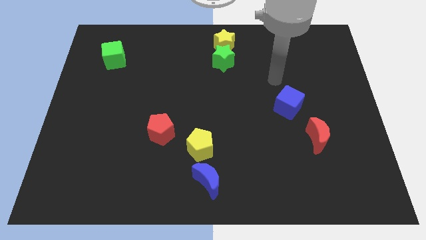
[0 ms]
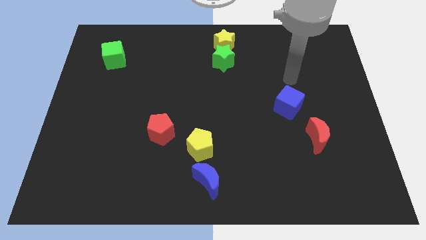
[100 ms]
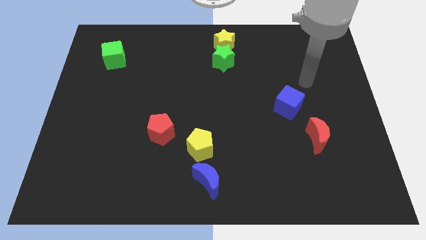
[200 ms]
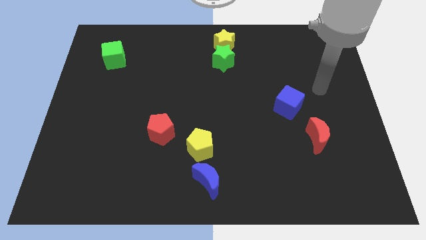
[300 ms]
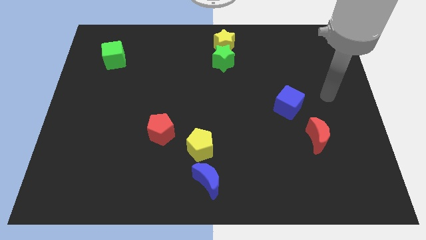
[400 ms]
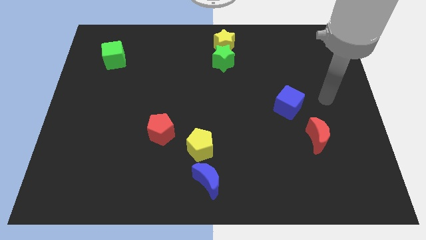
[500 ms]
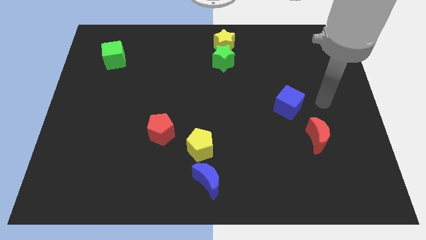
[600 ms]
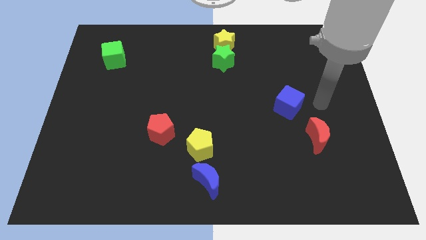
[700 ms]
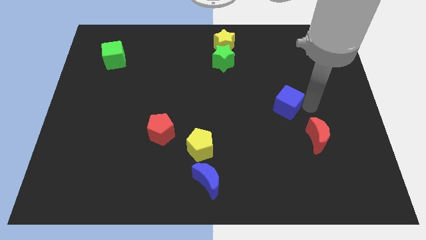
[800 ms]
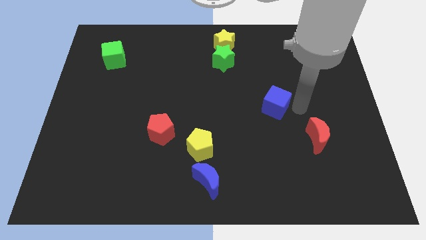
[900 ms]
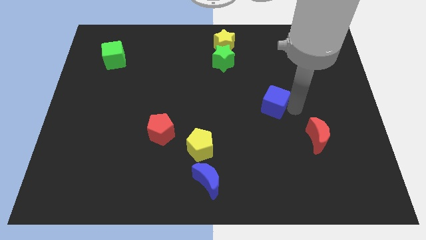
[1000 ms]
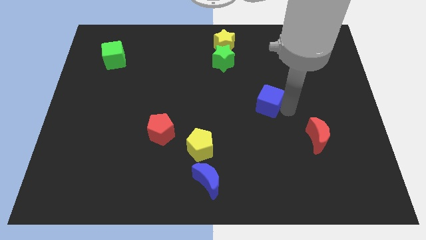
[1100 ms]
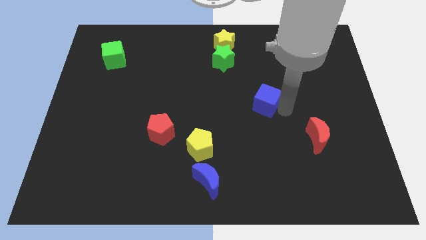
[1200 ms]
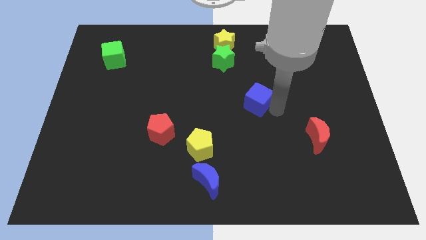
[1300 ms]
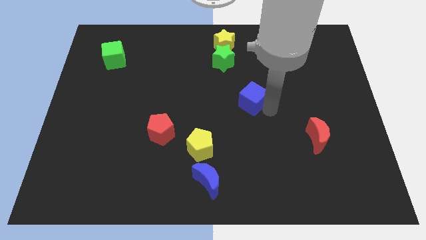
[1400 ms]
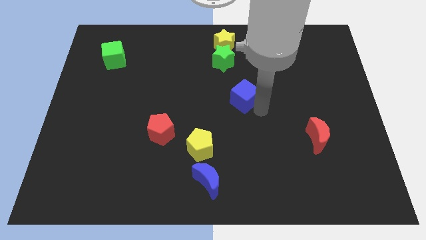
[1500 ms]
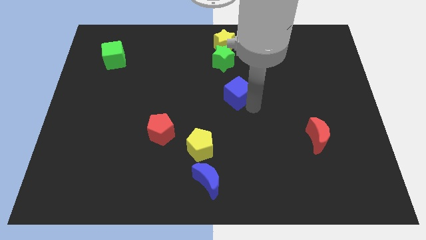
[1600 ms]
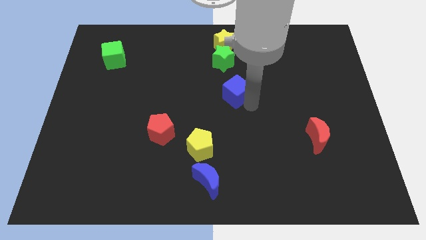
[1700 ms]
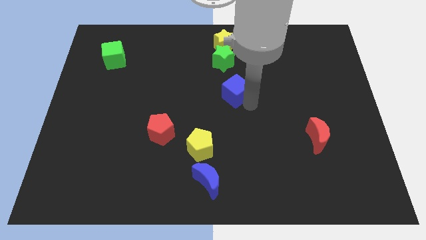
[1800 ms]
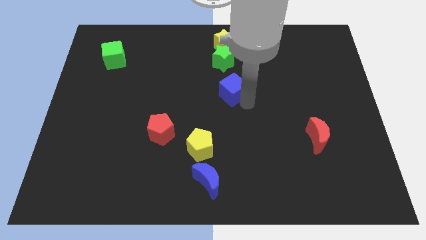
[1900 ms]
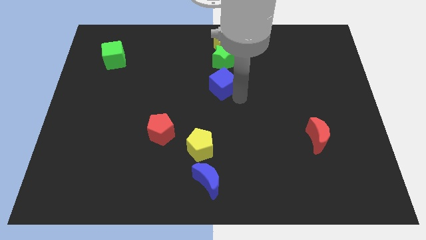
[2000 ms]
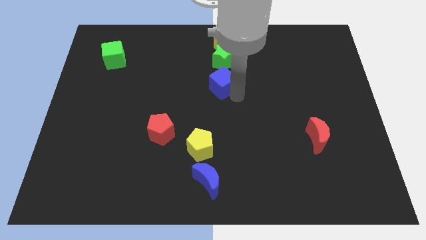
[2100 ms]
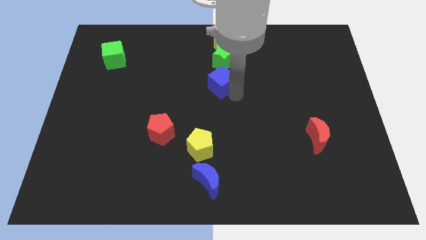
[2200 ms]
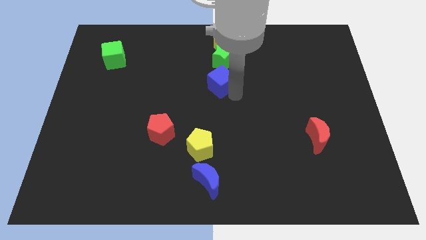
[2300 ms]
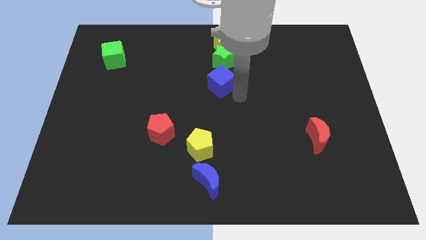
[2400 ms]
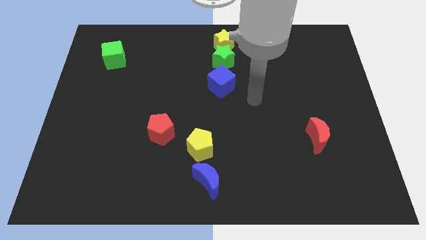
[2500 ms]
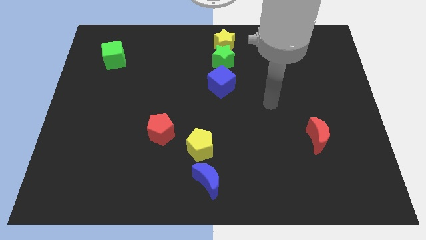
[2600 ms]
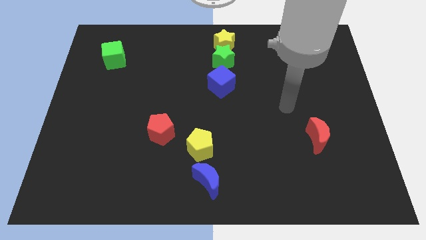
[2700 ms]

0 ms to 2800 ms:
push the blue cube to the bottom side of the green star

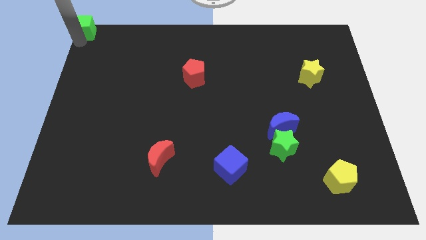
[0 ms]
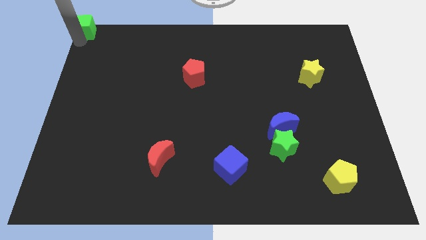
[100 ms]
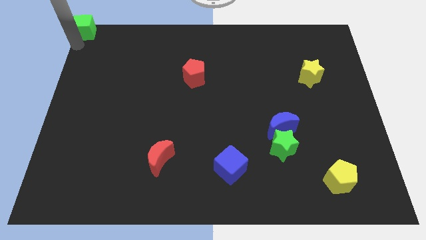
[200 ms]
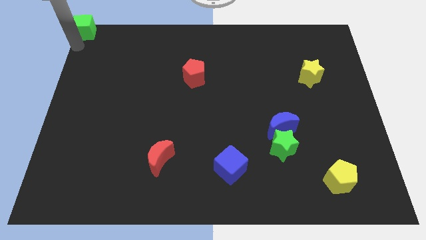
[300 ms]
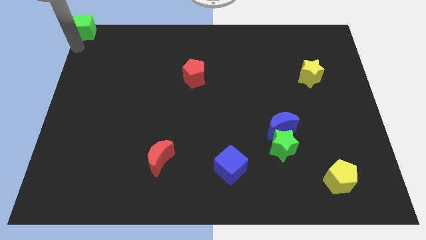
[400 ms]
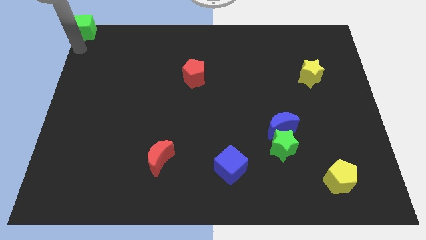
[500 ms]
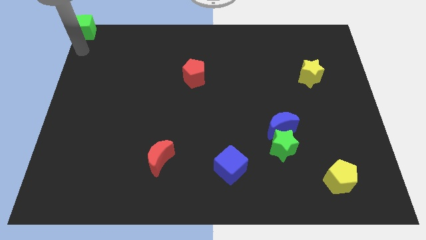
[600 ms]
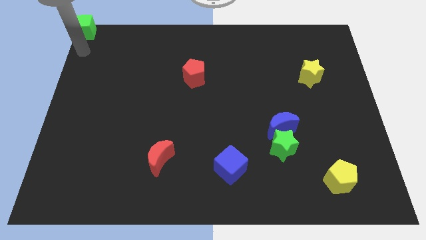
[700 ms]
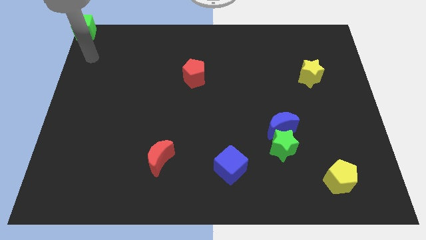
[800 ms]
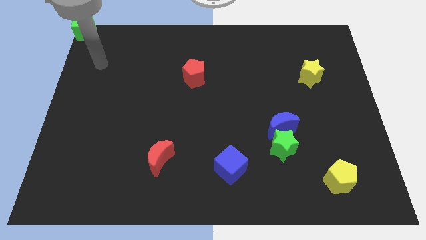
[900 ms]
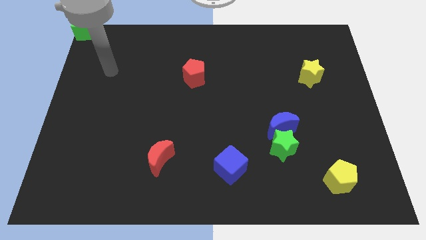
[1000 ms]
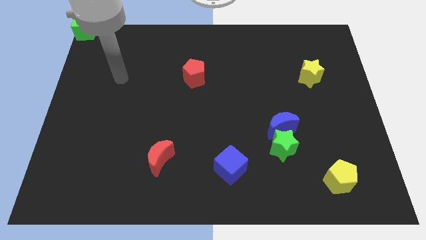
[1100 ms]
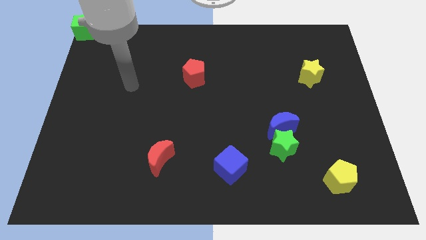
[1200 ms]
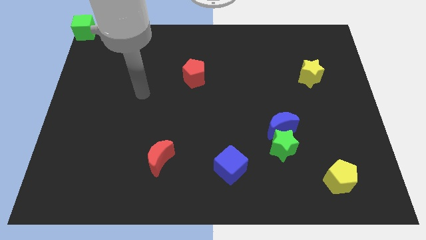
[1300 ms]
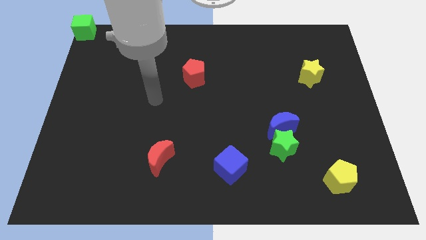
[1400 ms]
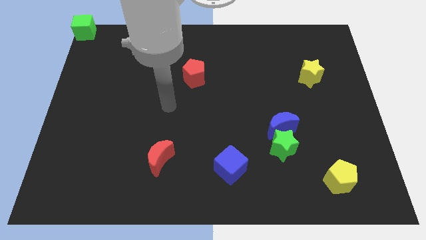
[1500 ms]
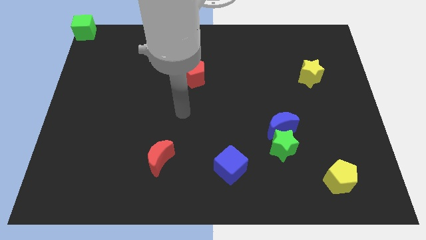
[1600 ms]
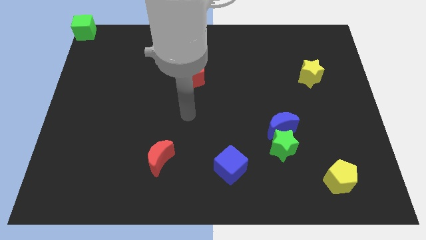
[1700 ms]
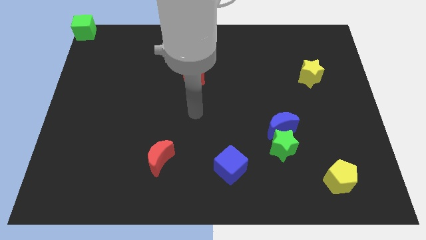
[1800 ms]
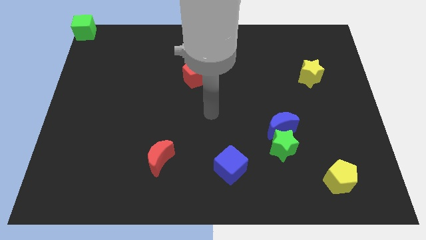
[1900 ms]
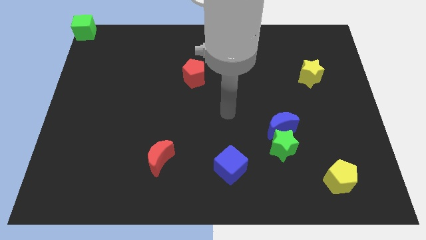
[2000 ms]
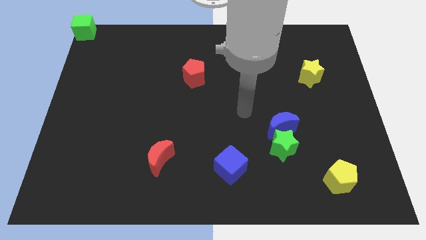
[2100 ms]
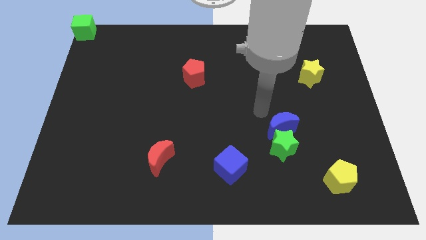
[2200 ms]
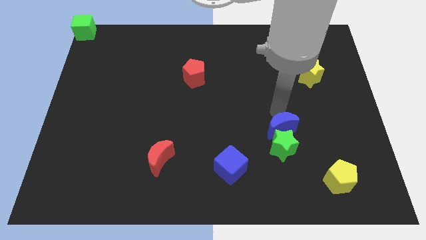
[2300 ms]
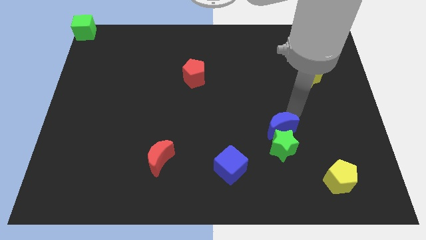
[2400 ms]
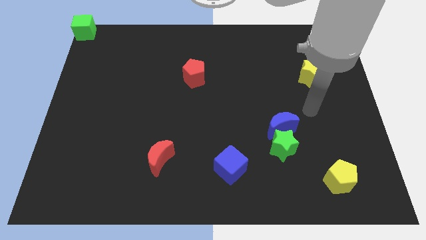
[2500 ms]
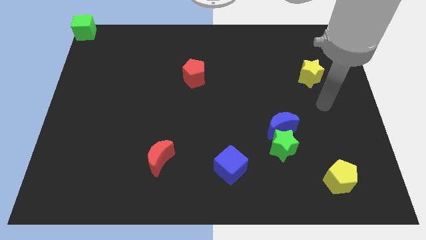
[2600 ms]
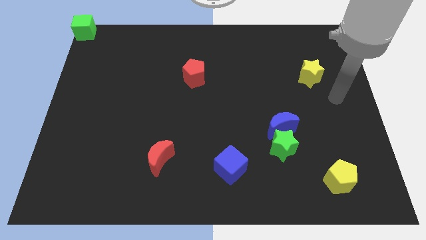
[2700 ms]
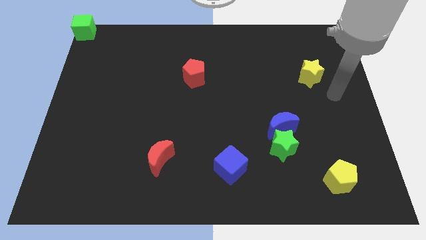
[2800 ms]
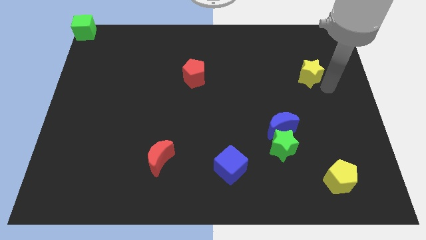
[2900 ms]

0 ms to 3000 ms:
move your arm near to the yellow star

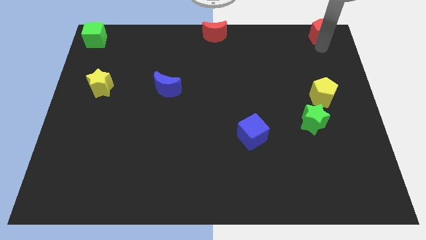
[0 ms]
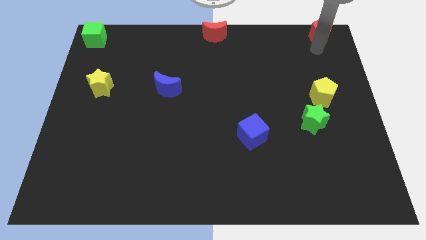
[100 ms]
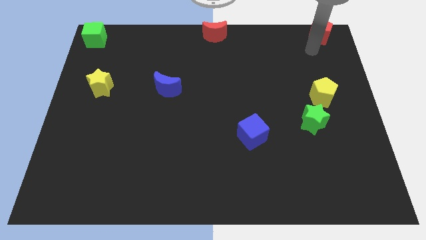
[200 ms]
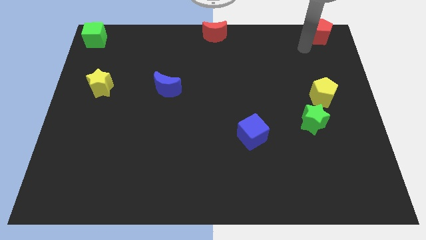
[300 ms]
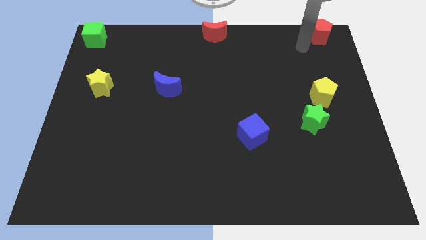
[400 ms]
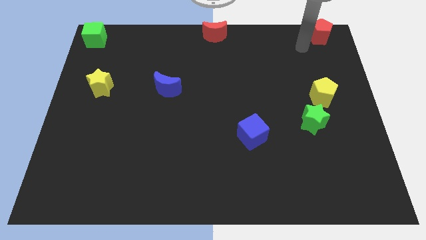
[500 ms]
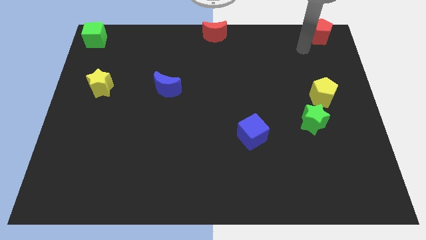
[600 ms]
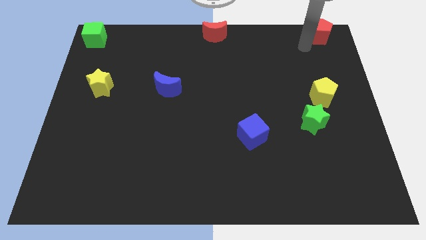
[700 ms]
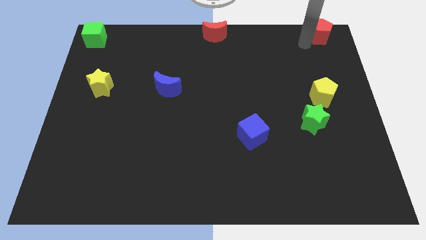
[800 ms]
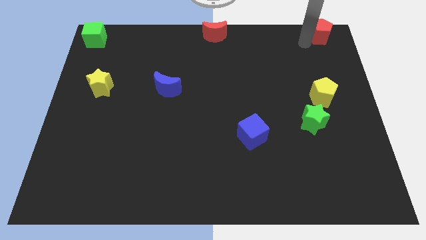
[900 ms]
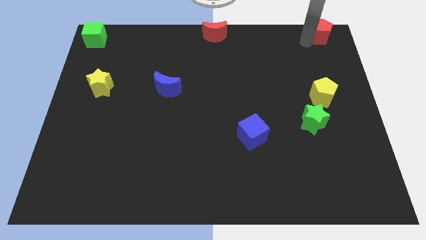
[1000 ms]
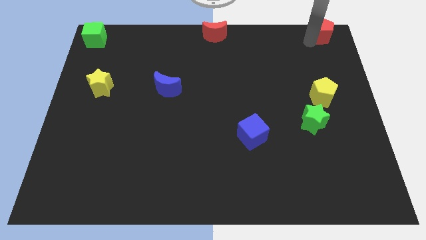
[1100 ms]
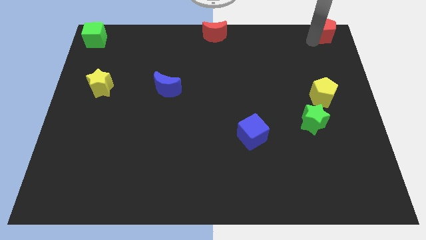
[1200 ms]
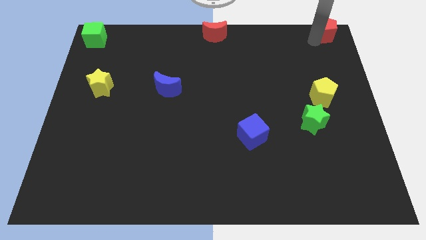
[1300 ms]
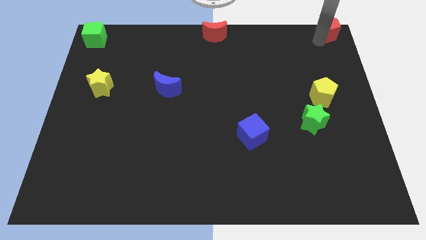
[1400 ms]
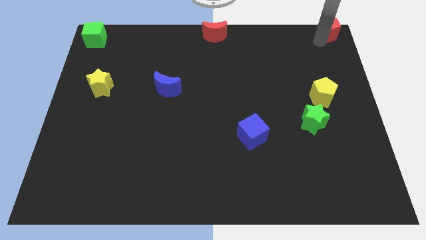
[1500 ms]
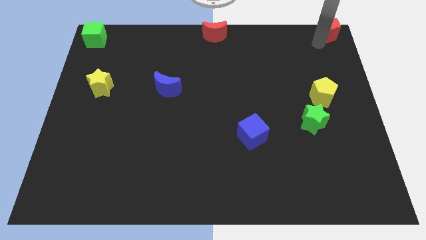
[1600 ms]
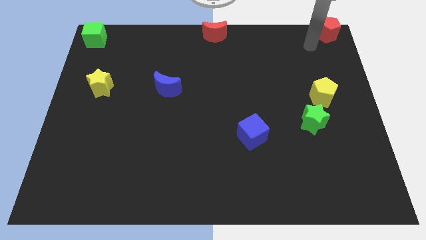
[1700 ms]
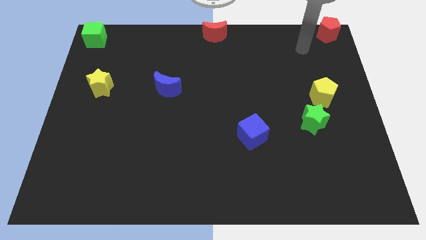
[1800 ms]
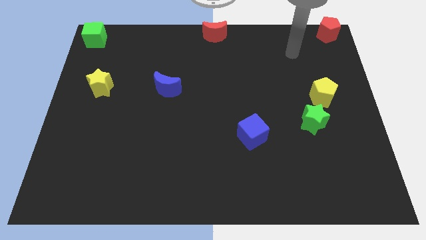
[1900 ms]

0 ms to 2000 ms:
push the red pentagon slightly towards the top right corner

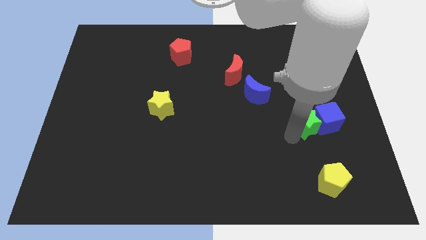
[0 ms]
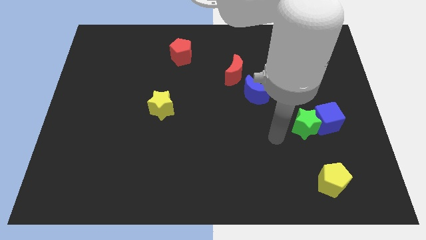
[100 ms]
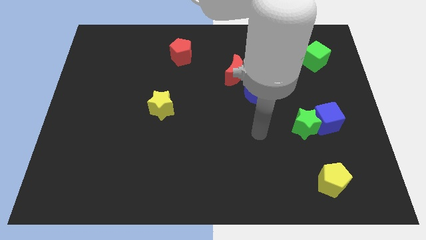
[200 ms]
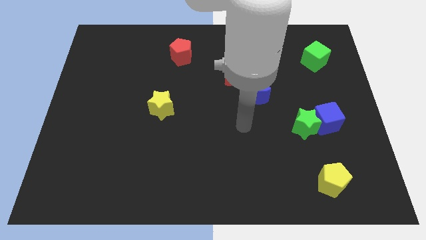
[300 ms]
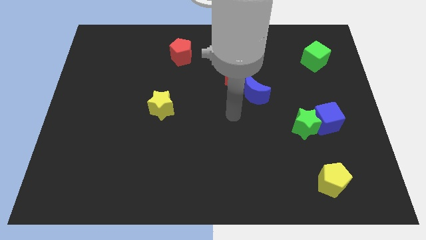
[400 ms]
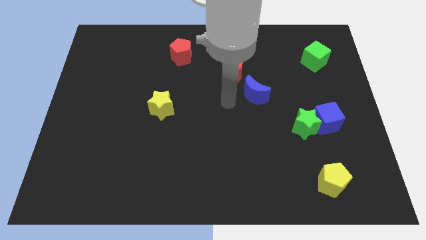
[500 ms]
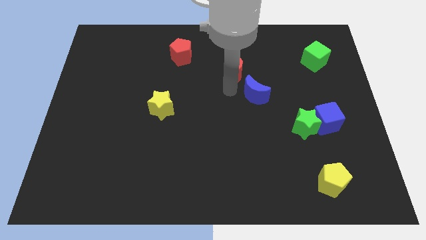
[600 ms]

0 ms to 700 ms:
move your arm to the bottom of red crescent

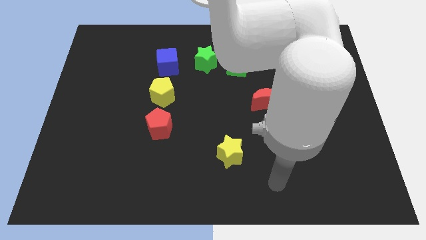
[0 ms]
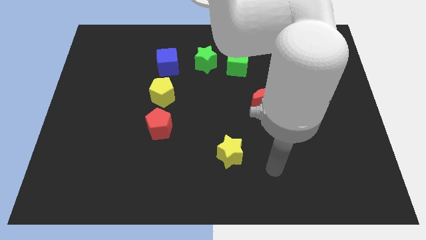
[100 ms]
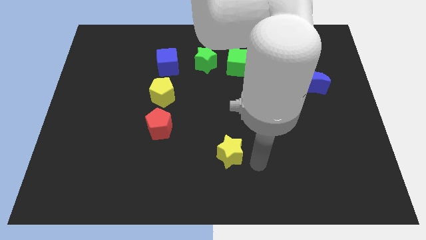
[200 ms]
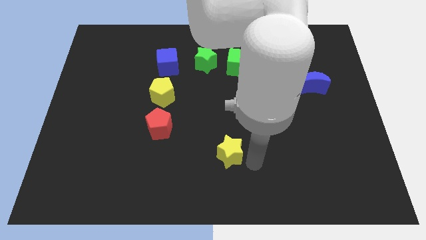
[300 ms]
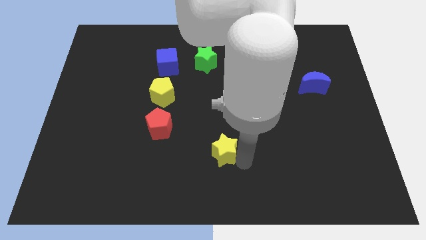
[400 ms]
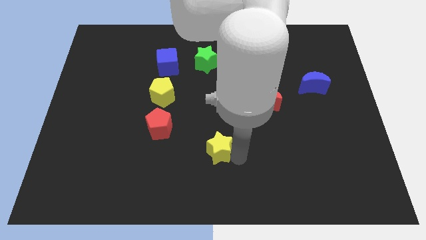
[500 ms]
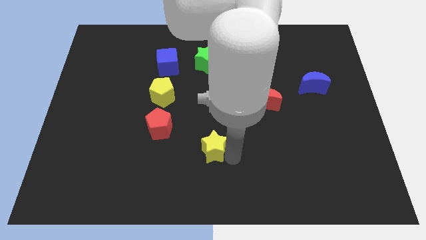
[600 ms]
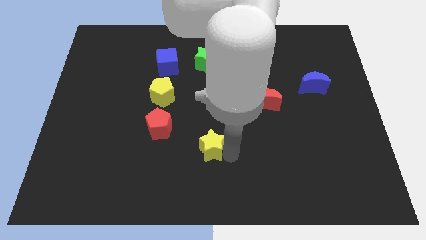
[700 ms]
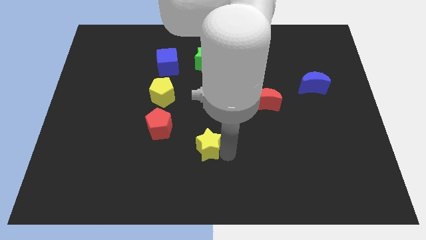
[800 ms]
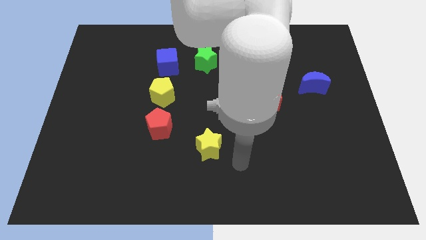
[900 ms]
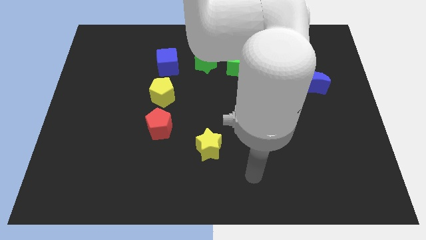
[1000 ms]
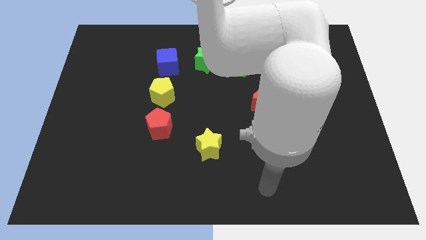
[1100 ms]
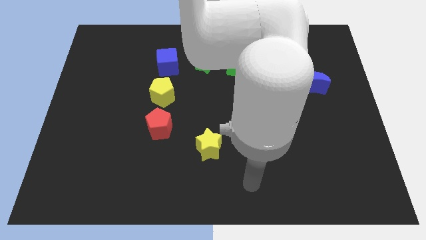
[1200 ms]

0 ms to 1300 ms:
move the yellow star towards the red pentagon
